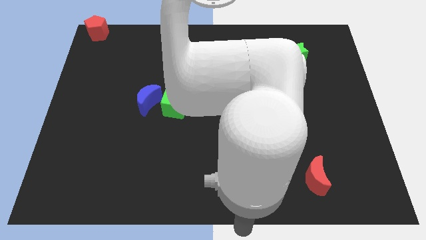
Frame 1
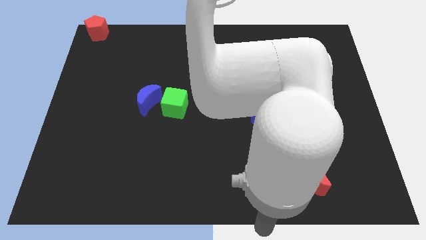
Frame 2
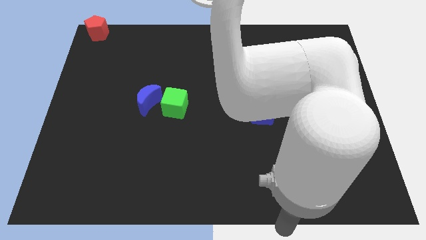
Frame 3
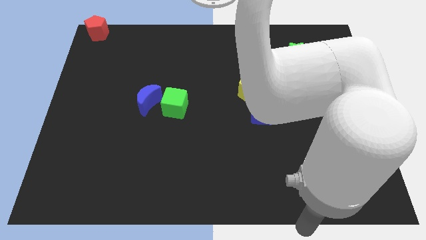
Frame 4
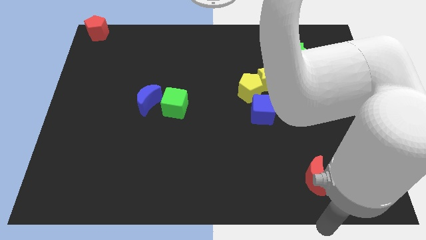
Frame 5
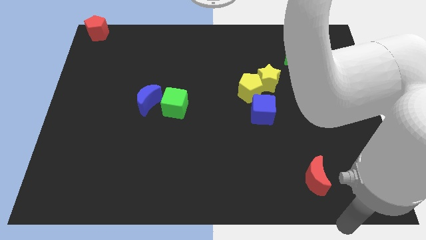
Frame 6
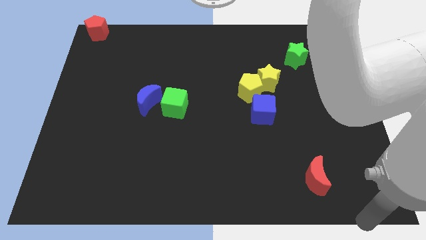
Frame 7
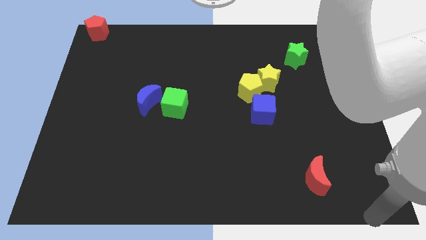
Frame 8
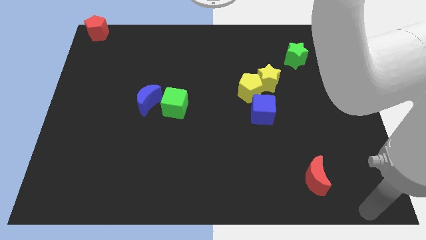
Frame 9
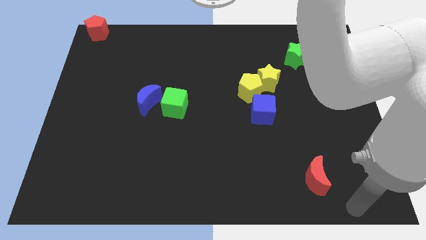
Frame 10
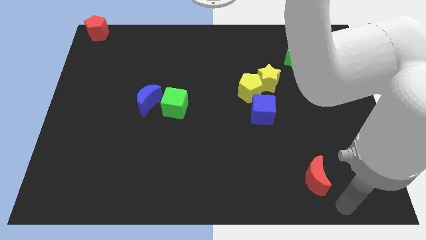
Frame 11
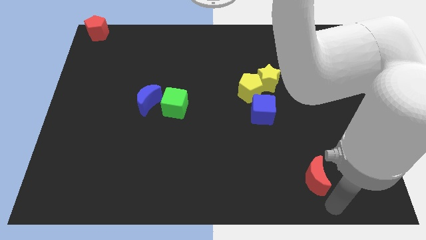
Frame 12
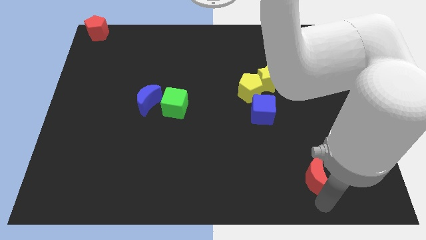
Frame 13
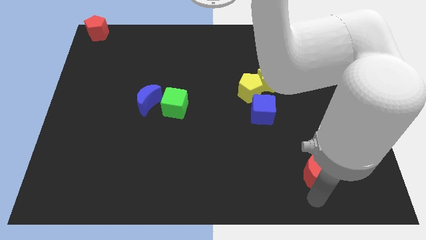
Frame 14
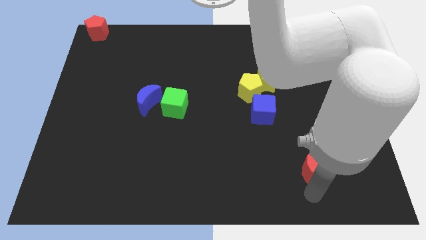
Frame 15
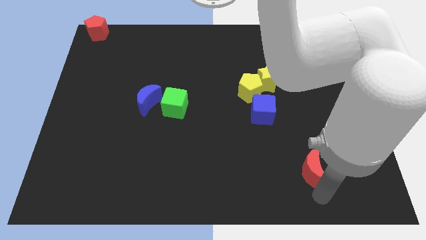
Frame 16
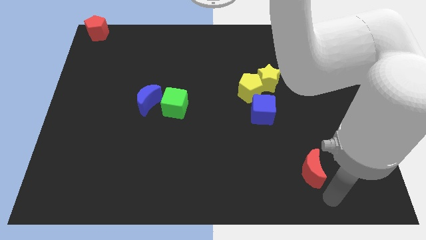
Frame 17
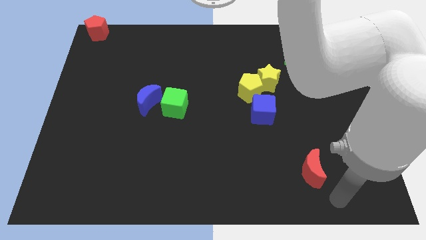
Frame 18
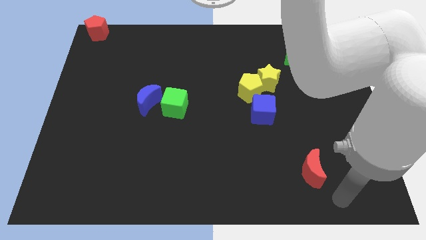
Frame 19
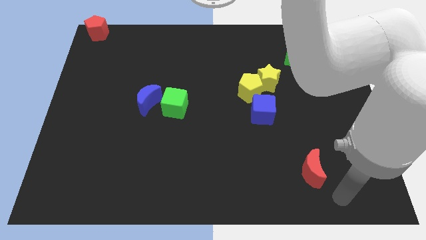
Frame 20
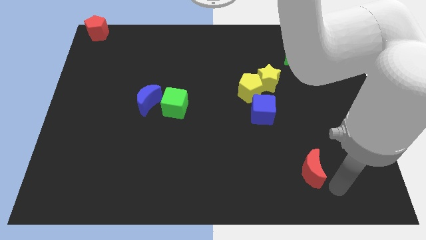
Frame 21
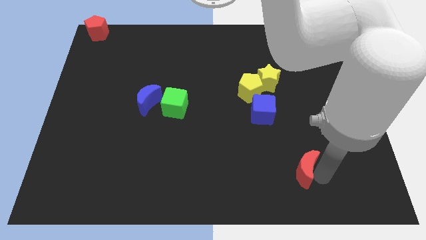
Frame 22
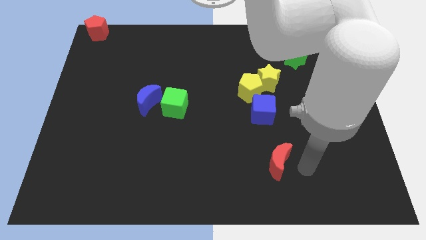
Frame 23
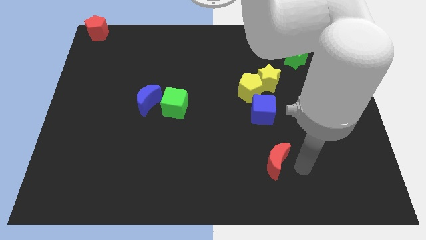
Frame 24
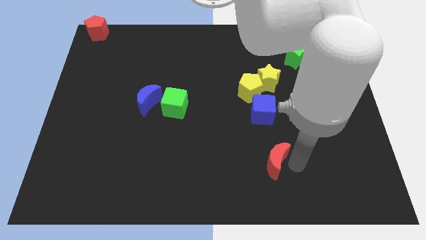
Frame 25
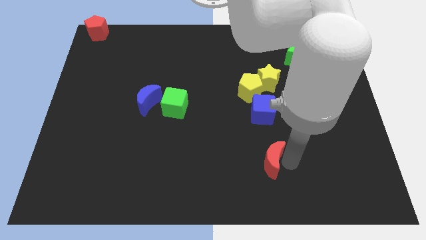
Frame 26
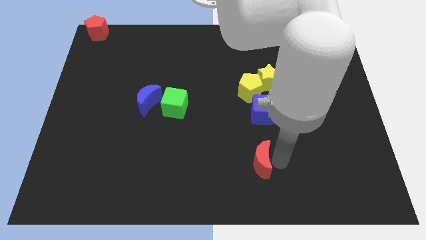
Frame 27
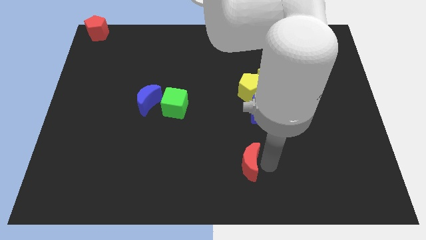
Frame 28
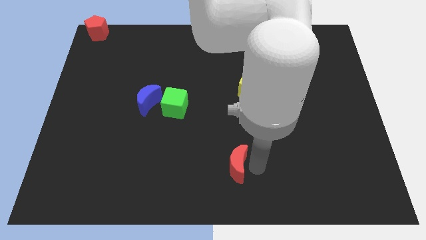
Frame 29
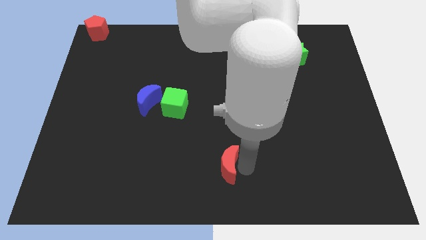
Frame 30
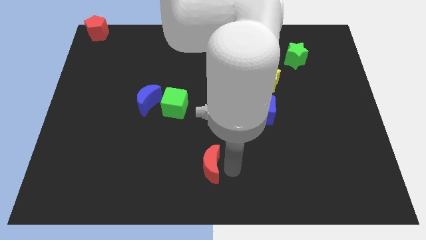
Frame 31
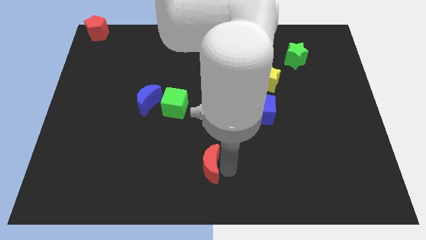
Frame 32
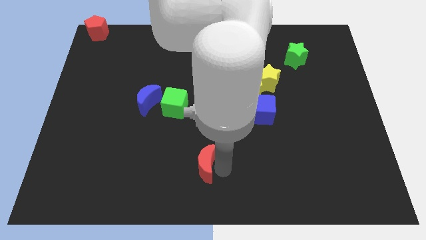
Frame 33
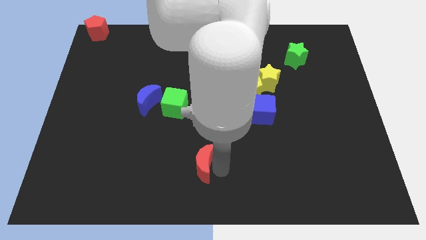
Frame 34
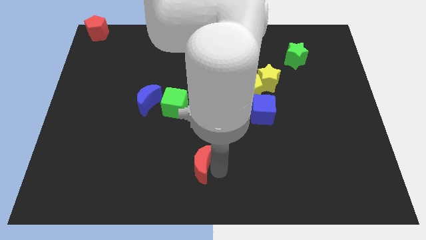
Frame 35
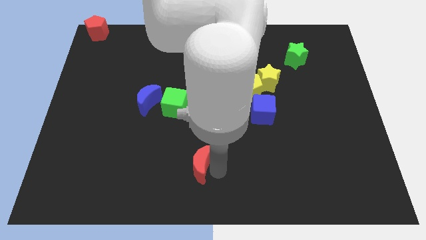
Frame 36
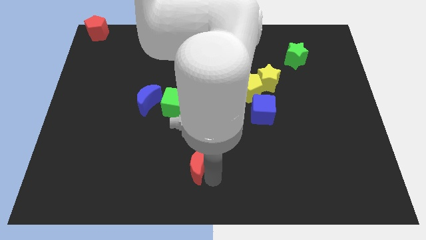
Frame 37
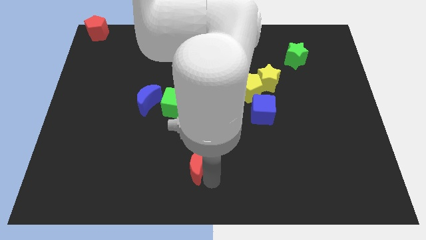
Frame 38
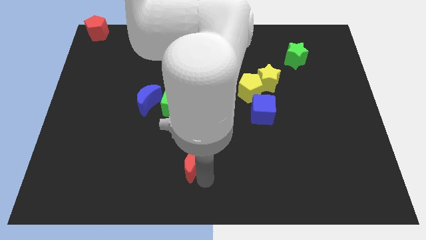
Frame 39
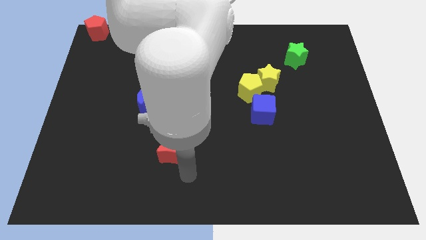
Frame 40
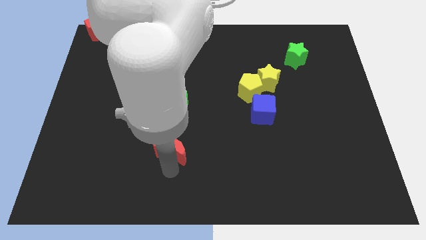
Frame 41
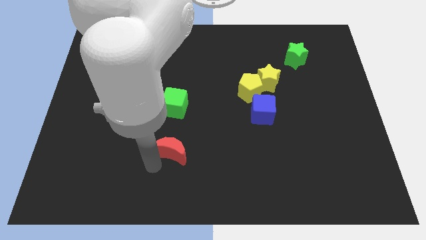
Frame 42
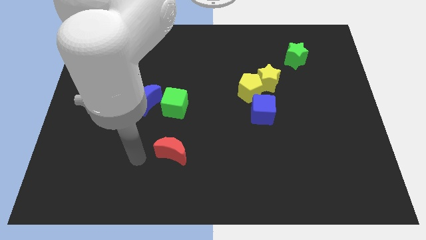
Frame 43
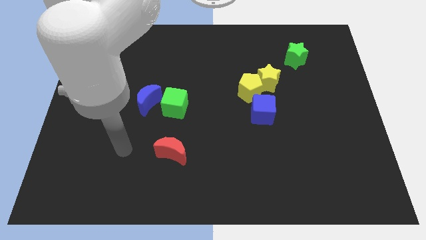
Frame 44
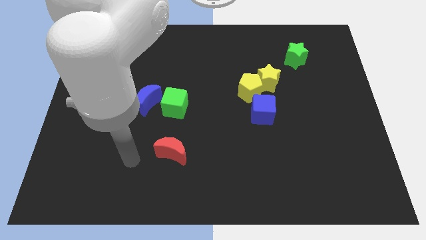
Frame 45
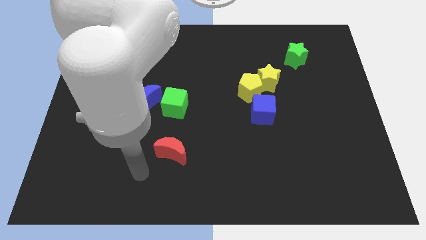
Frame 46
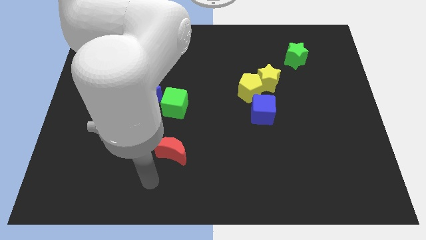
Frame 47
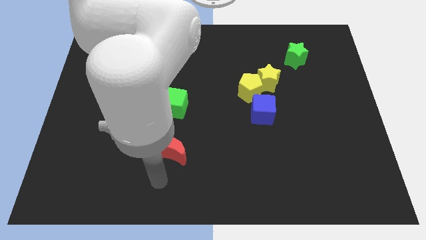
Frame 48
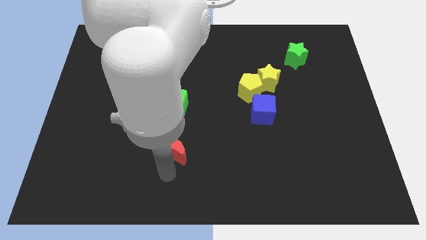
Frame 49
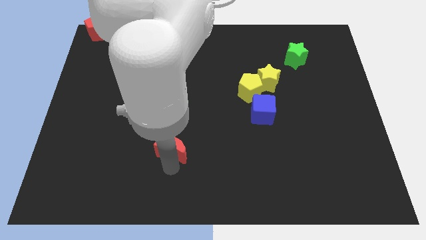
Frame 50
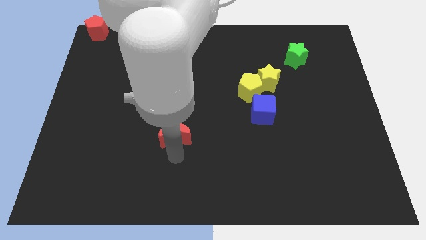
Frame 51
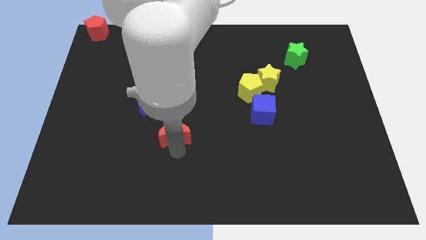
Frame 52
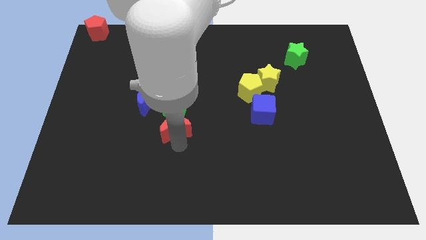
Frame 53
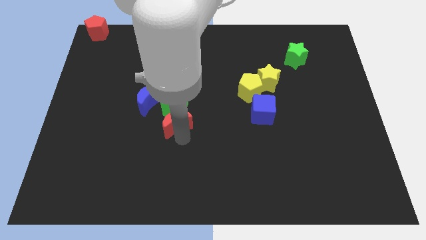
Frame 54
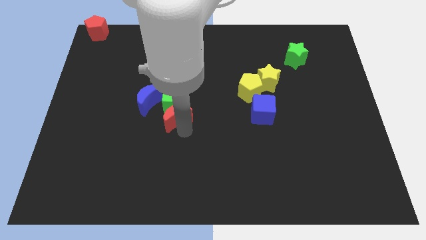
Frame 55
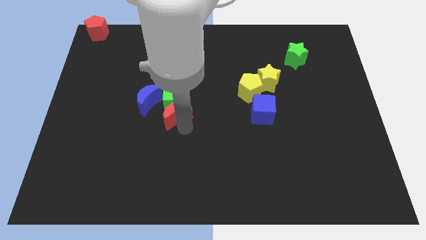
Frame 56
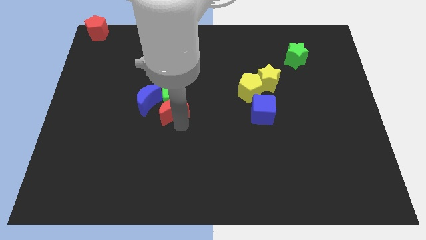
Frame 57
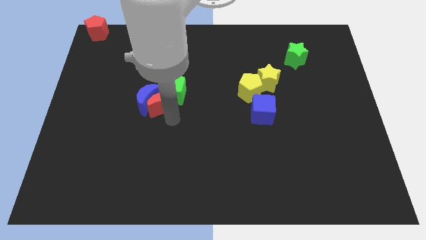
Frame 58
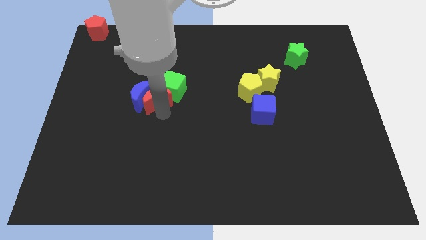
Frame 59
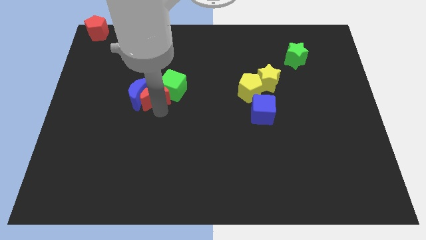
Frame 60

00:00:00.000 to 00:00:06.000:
push the red moon into green cube

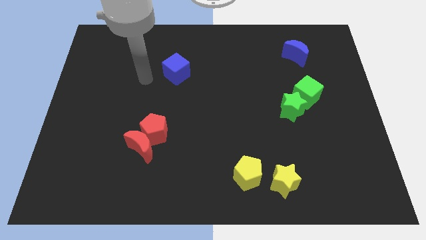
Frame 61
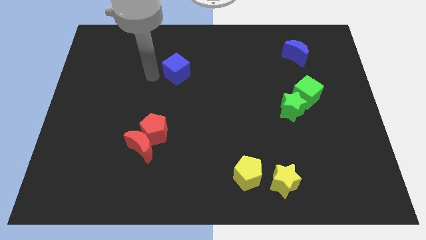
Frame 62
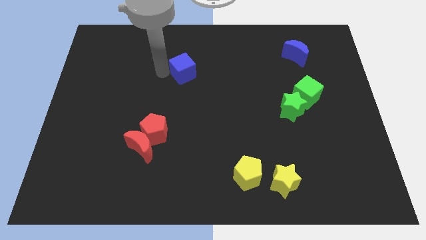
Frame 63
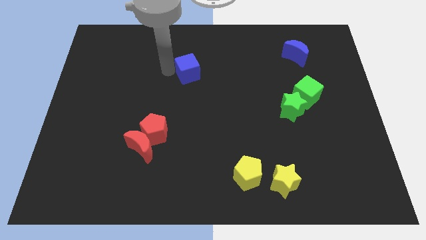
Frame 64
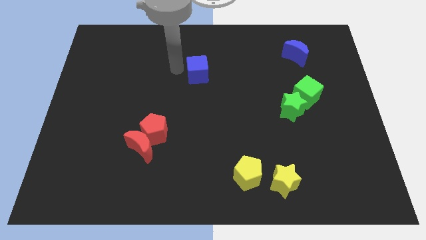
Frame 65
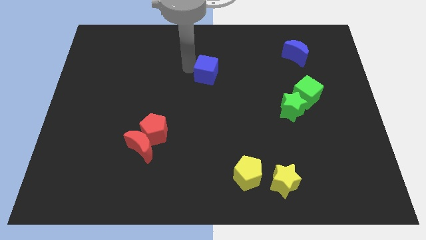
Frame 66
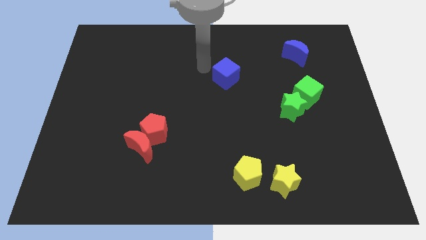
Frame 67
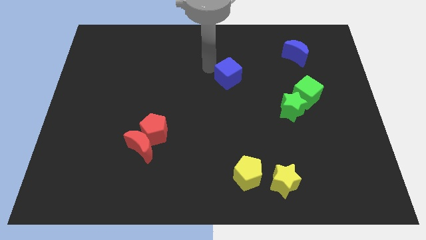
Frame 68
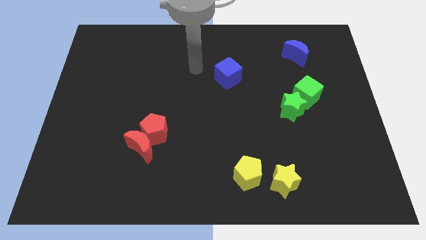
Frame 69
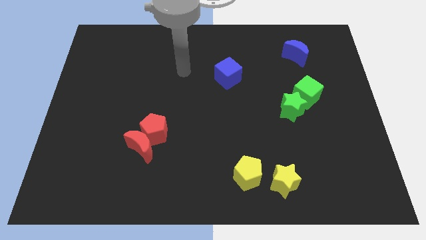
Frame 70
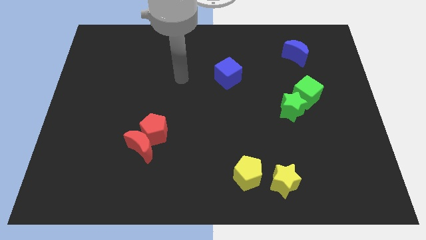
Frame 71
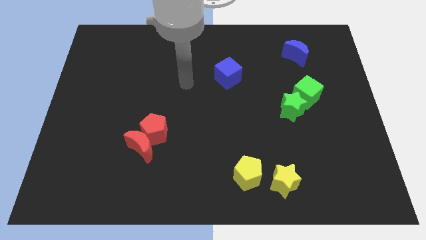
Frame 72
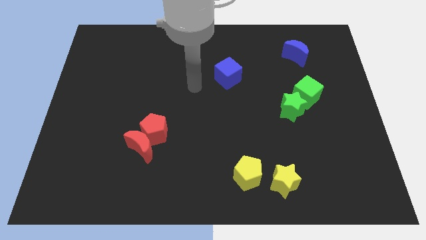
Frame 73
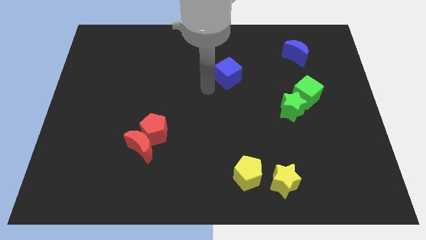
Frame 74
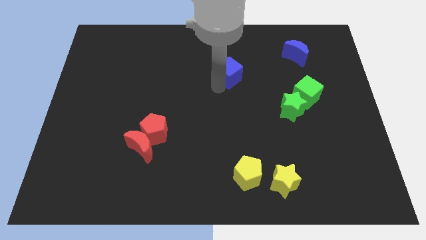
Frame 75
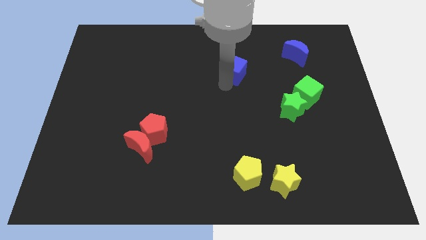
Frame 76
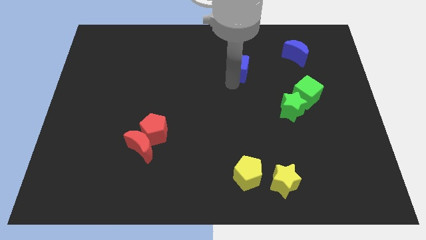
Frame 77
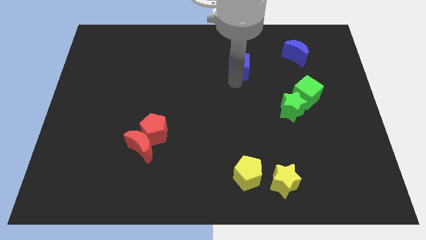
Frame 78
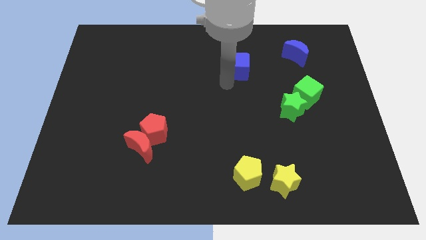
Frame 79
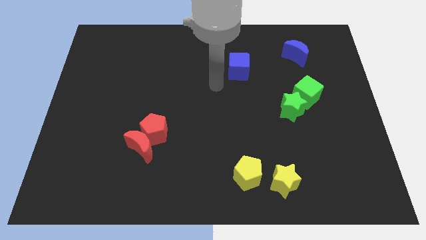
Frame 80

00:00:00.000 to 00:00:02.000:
place the blue cube diagonally to the green star

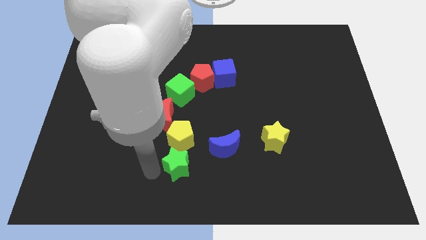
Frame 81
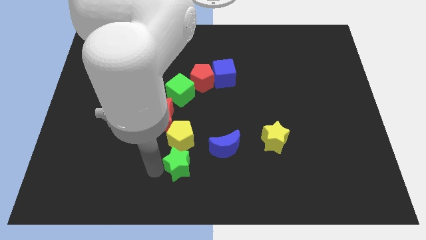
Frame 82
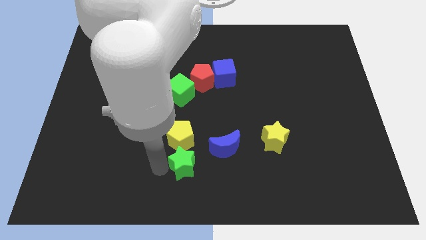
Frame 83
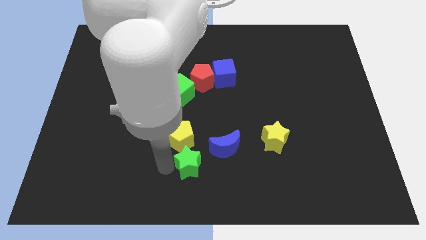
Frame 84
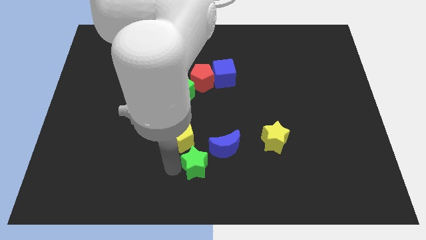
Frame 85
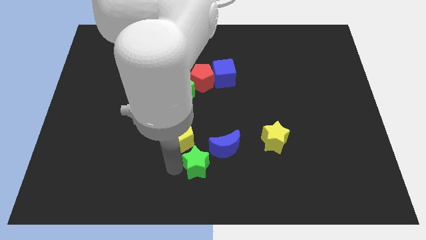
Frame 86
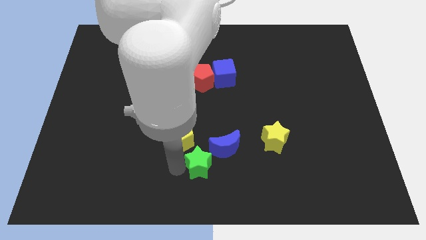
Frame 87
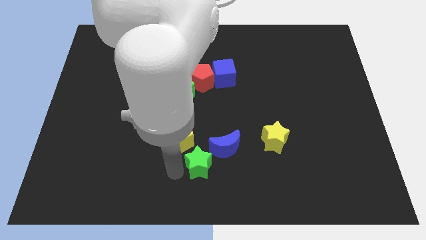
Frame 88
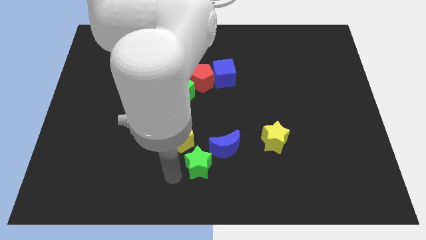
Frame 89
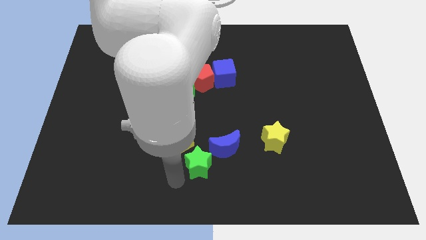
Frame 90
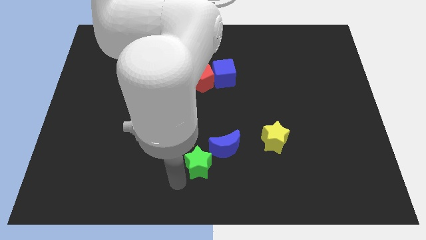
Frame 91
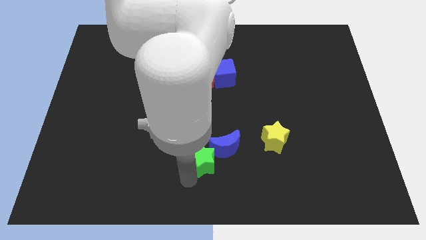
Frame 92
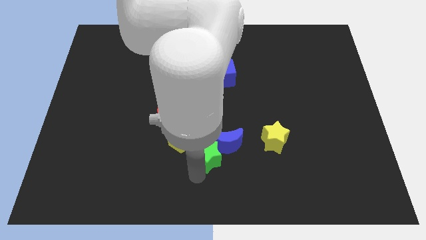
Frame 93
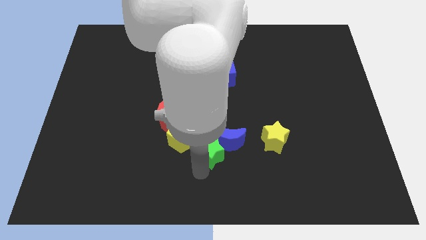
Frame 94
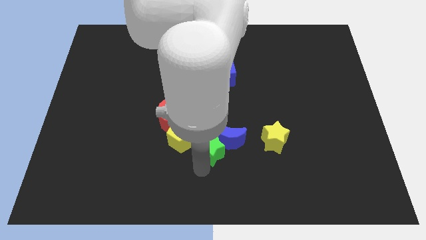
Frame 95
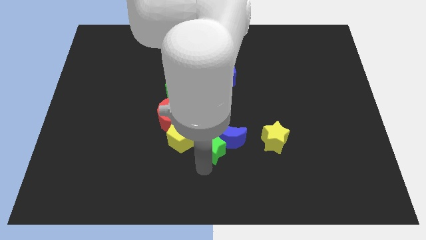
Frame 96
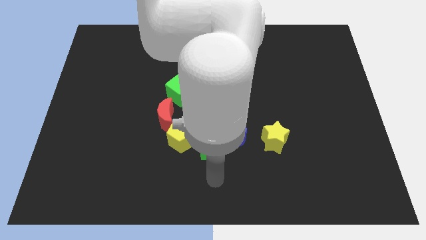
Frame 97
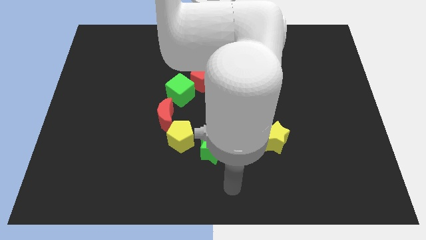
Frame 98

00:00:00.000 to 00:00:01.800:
push the green star towards the blue crescent
